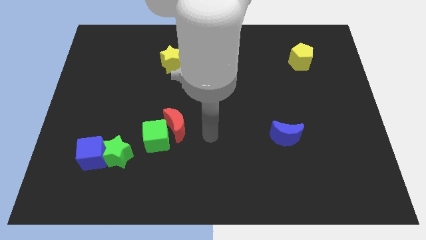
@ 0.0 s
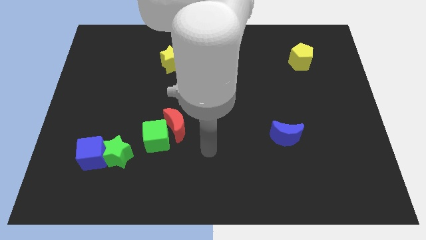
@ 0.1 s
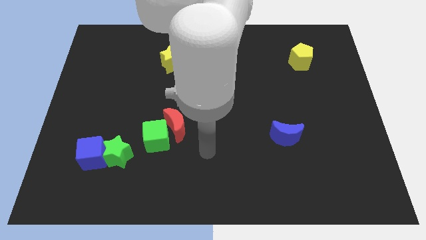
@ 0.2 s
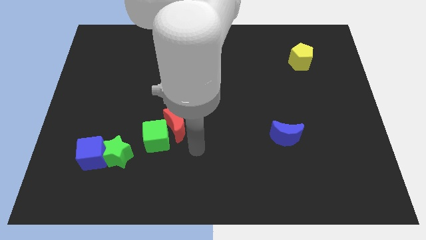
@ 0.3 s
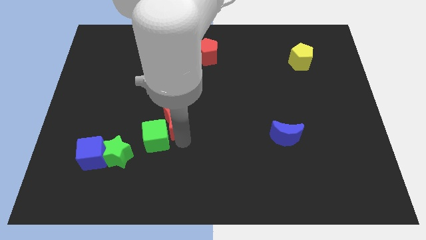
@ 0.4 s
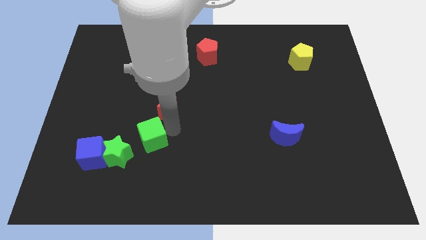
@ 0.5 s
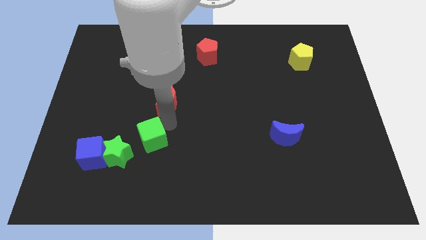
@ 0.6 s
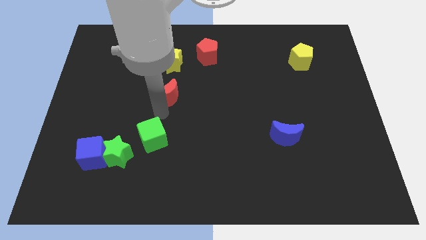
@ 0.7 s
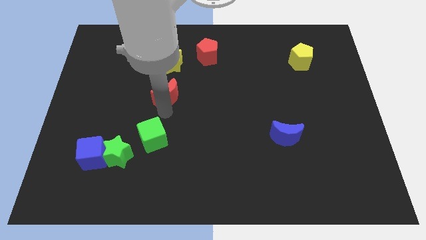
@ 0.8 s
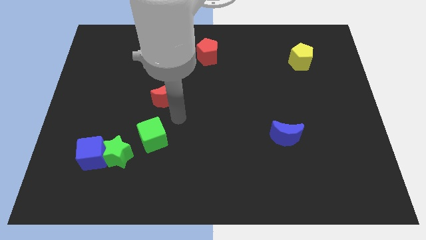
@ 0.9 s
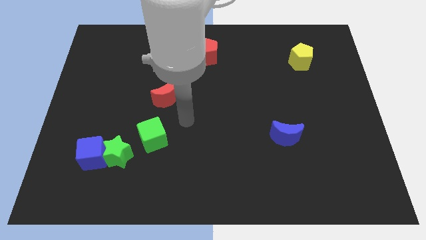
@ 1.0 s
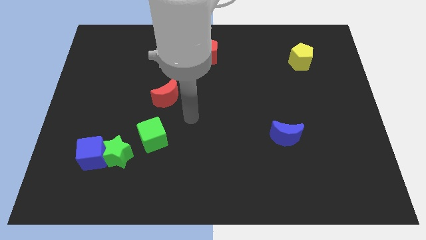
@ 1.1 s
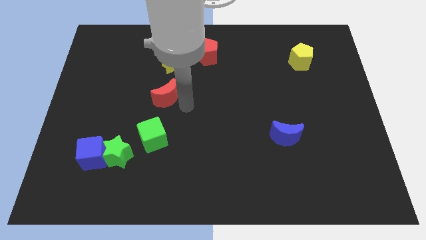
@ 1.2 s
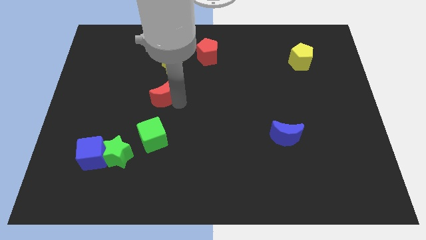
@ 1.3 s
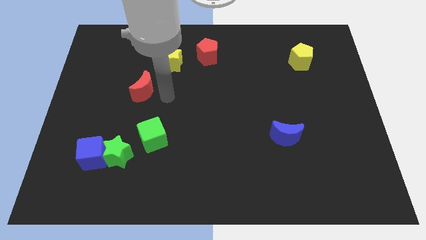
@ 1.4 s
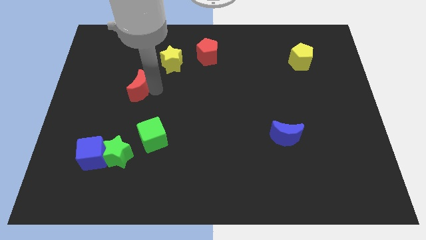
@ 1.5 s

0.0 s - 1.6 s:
move the red moon above te green cube

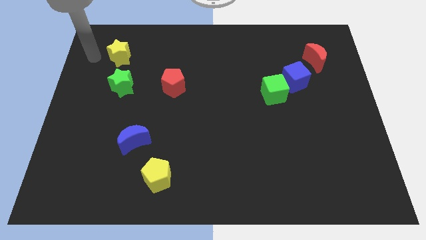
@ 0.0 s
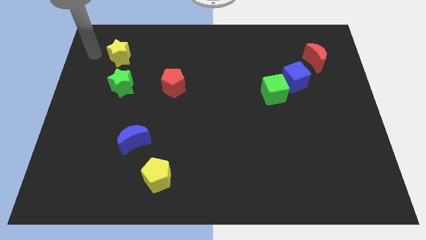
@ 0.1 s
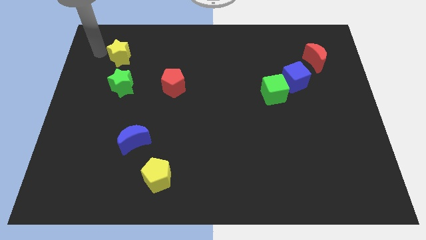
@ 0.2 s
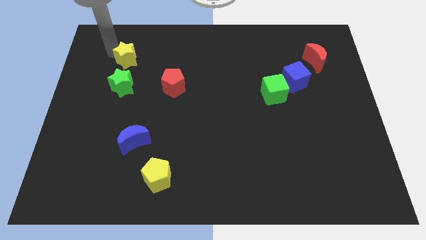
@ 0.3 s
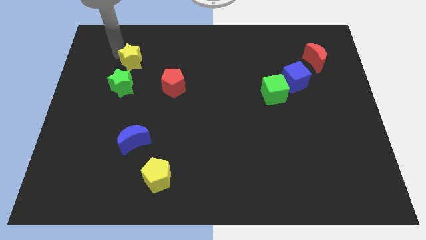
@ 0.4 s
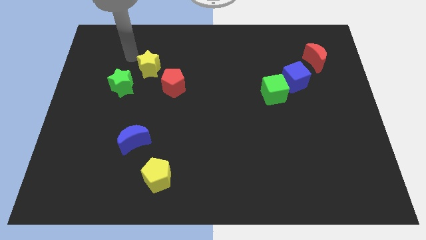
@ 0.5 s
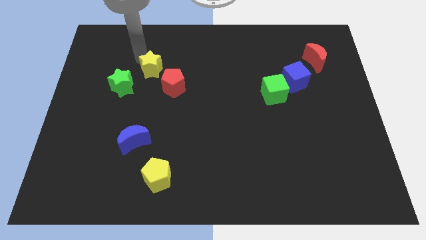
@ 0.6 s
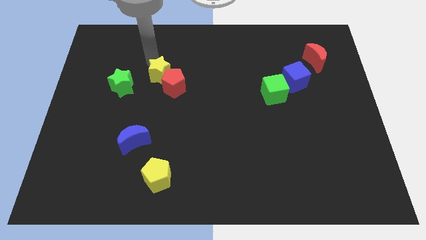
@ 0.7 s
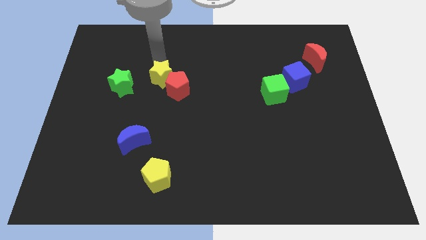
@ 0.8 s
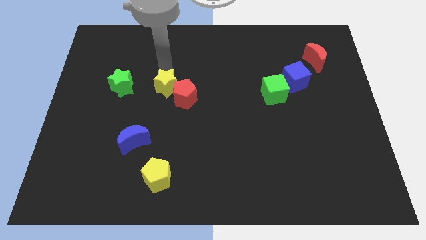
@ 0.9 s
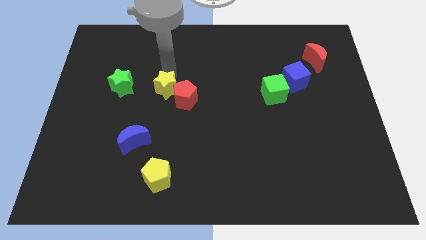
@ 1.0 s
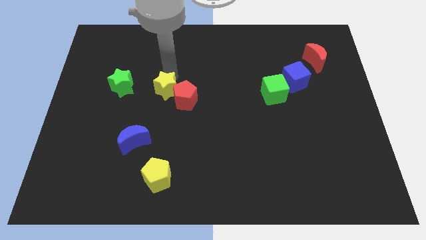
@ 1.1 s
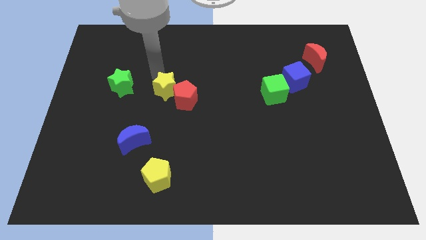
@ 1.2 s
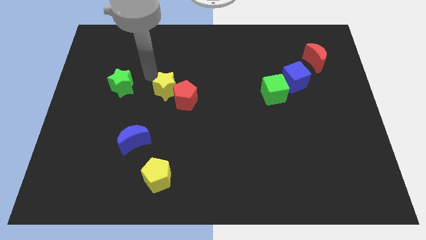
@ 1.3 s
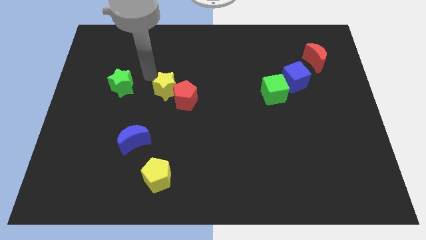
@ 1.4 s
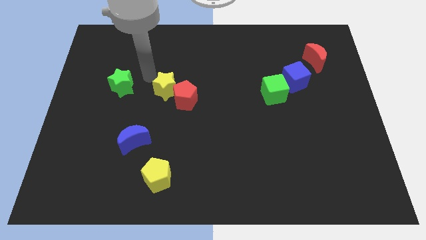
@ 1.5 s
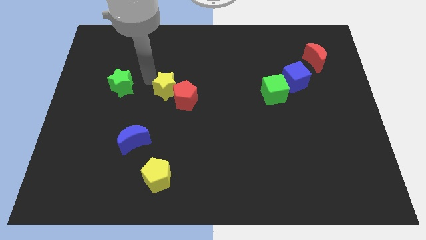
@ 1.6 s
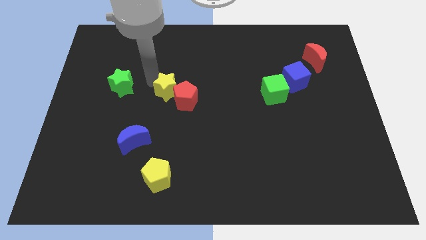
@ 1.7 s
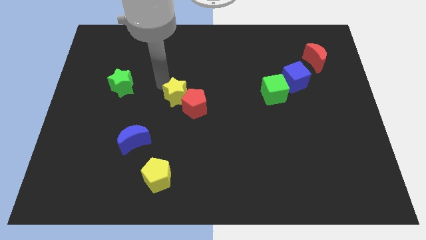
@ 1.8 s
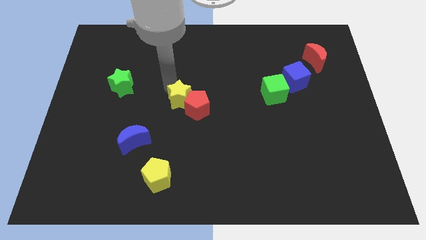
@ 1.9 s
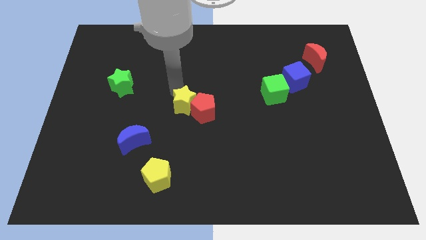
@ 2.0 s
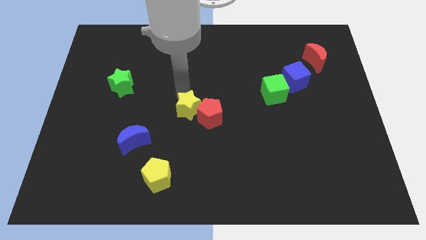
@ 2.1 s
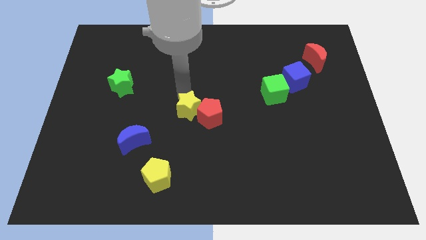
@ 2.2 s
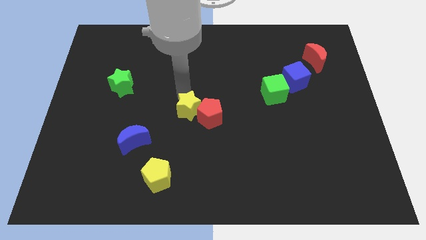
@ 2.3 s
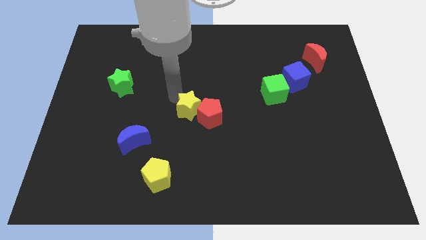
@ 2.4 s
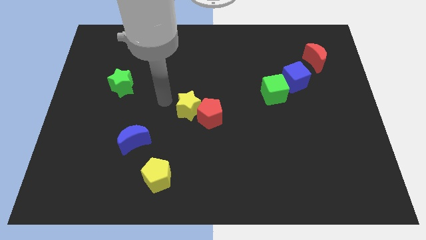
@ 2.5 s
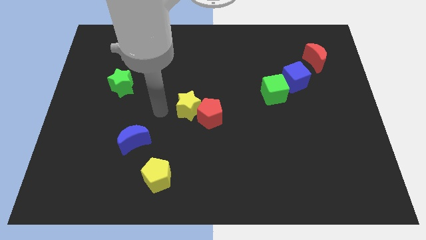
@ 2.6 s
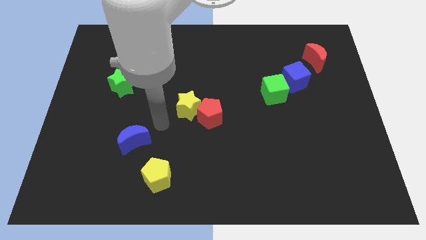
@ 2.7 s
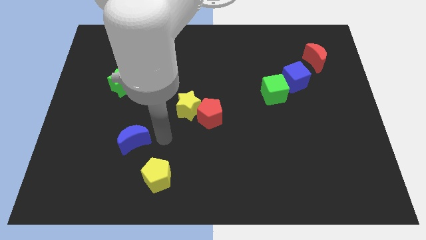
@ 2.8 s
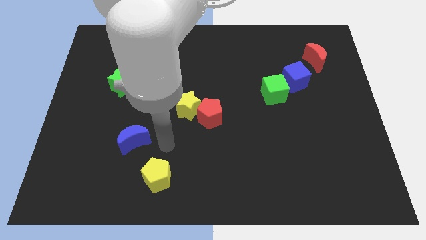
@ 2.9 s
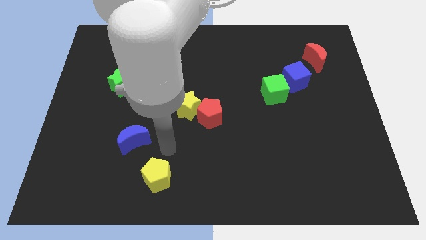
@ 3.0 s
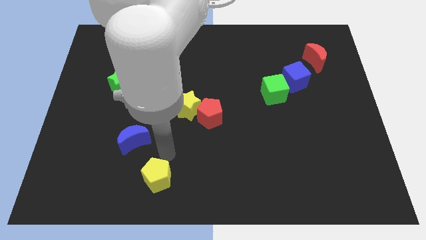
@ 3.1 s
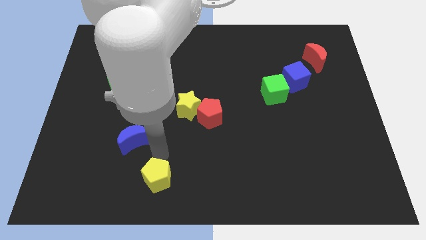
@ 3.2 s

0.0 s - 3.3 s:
push the yellow star and red pentagon together diagonally on the top right side of the yellow pentagon

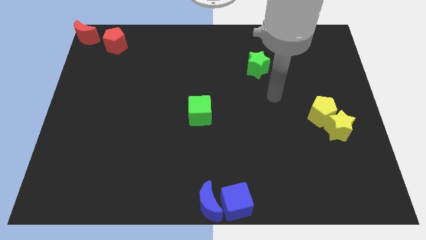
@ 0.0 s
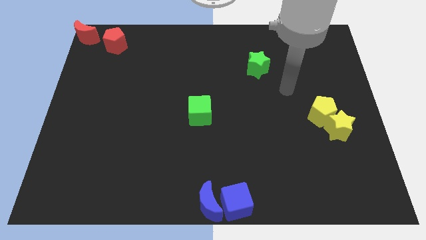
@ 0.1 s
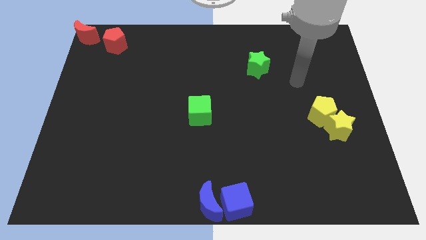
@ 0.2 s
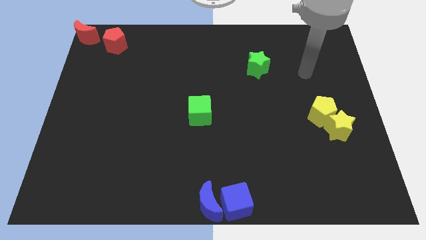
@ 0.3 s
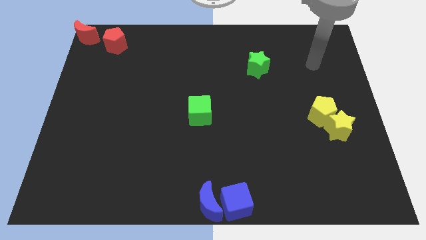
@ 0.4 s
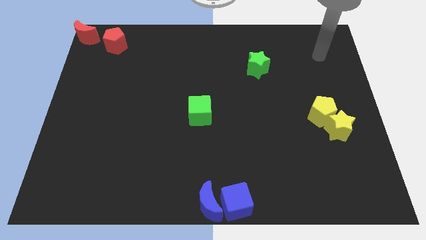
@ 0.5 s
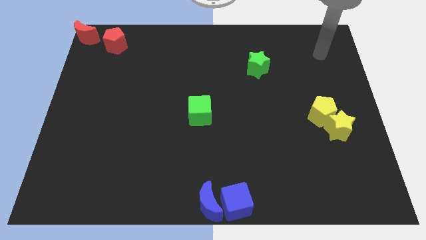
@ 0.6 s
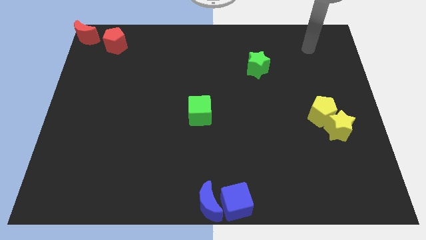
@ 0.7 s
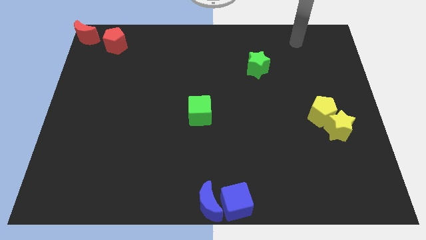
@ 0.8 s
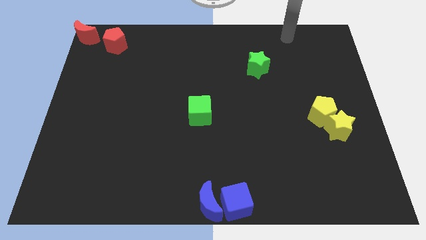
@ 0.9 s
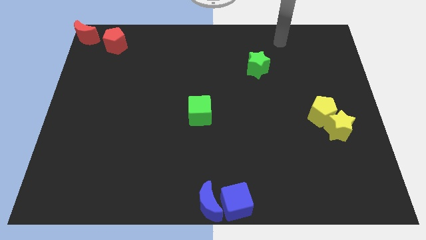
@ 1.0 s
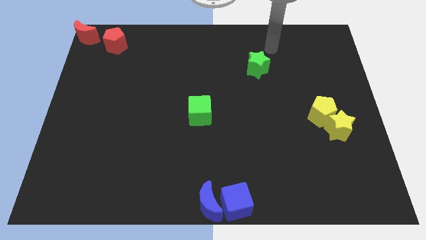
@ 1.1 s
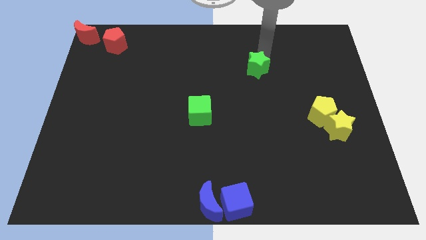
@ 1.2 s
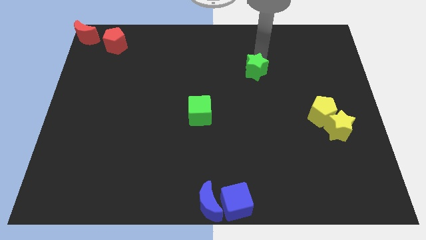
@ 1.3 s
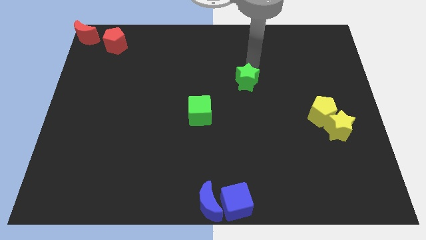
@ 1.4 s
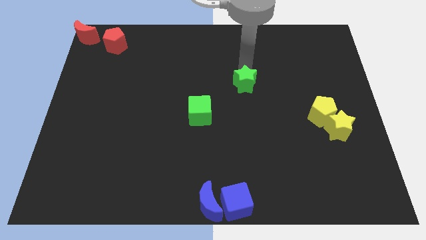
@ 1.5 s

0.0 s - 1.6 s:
push the green star towards the green cube

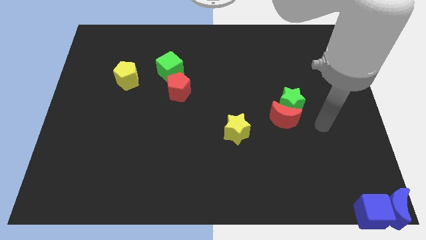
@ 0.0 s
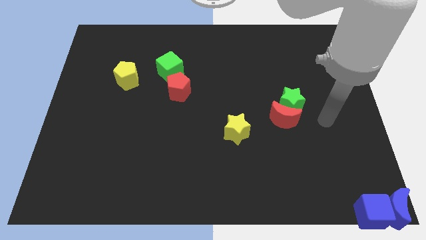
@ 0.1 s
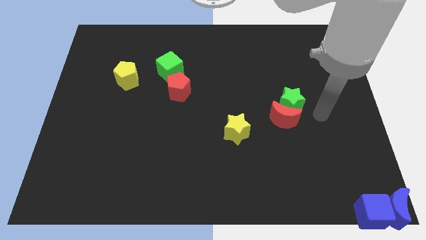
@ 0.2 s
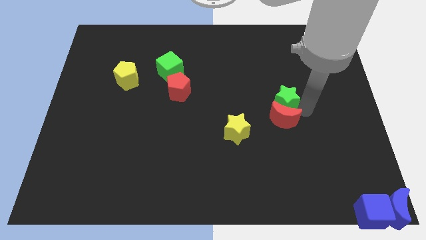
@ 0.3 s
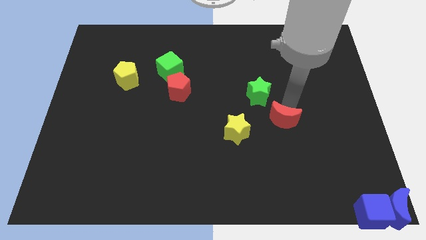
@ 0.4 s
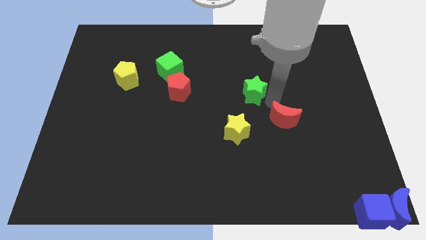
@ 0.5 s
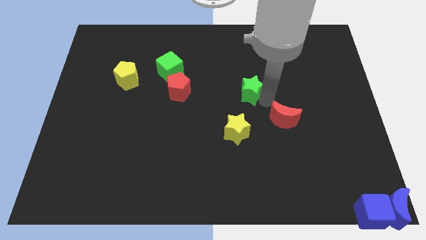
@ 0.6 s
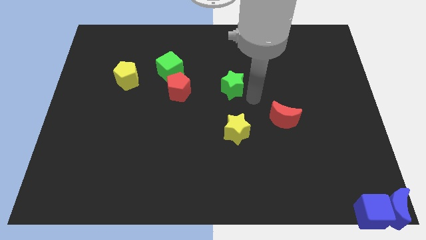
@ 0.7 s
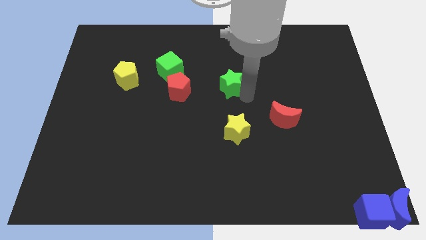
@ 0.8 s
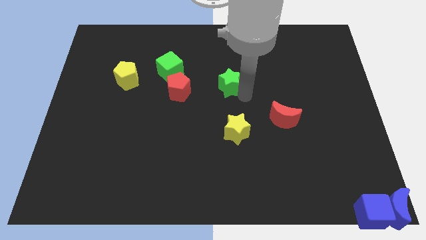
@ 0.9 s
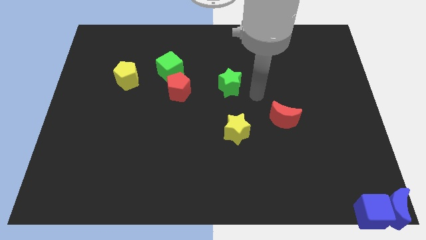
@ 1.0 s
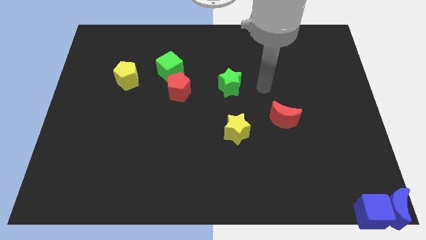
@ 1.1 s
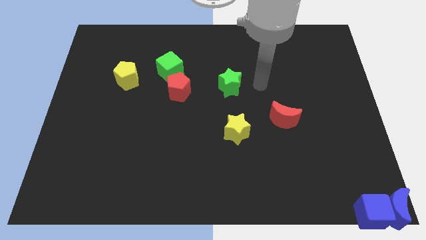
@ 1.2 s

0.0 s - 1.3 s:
push the green star closer to the red pentagon

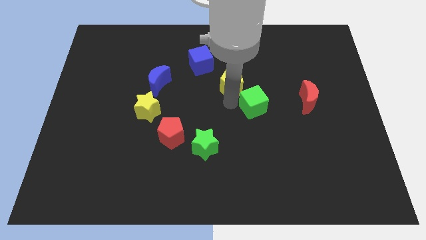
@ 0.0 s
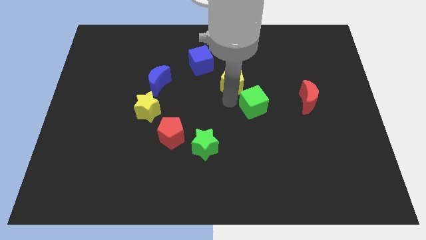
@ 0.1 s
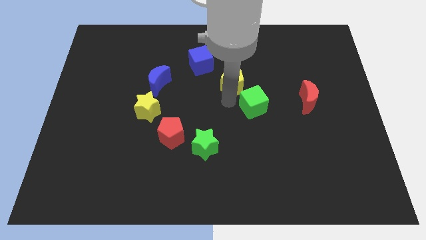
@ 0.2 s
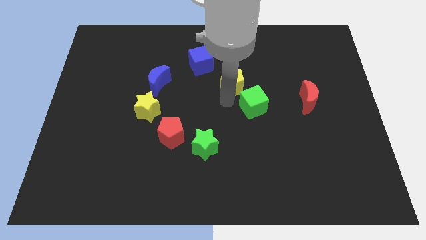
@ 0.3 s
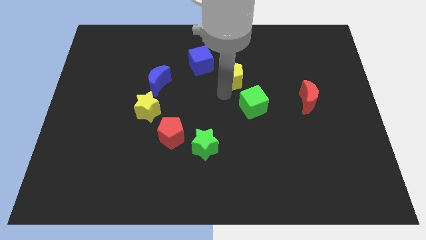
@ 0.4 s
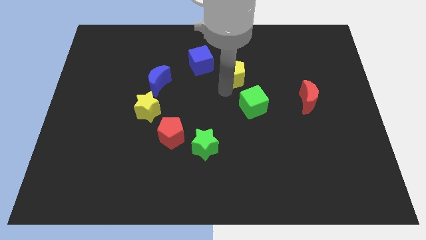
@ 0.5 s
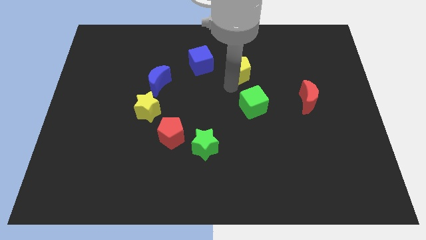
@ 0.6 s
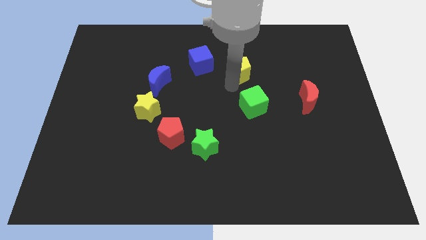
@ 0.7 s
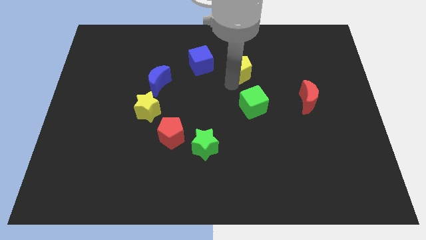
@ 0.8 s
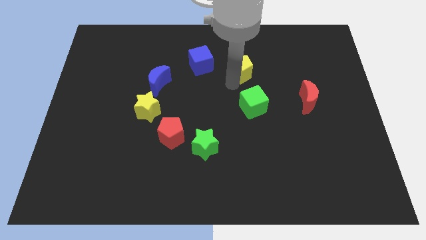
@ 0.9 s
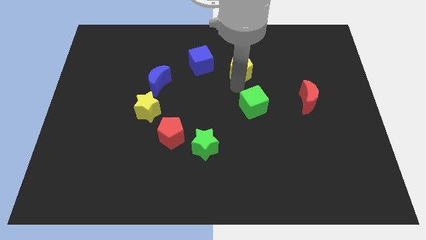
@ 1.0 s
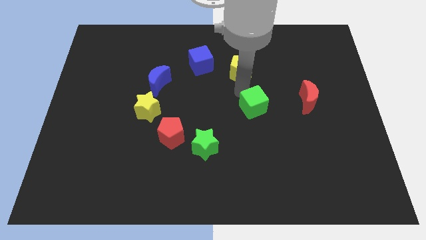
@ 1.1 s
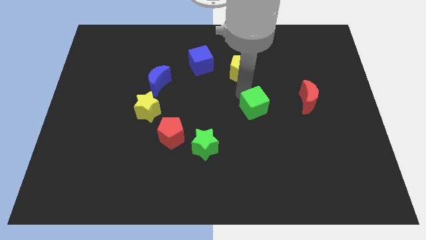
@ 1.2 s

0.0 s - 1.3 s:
place yellow pentagon to the right of blue cube
